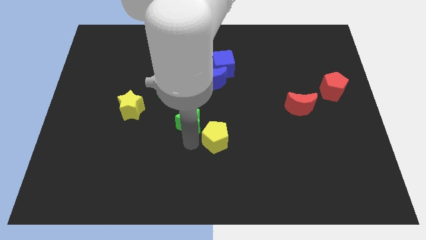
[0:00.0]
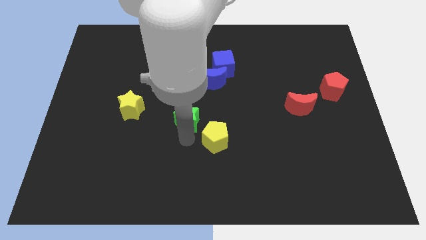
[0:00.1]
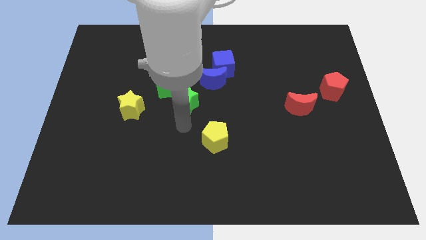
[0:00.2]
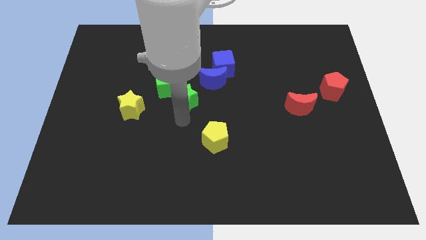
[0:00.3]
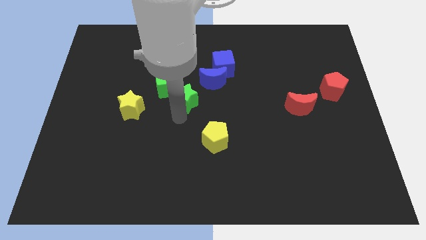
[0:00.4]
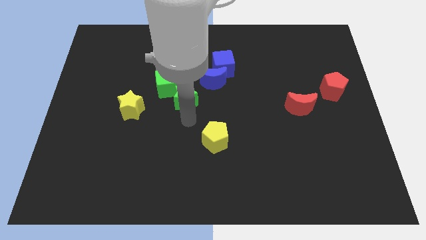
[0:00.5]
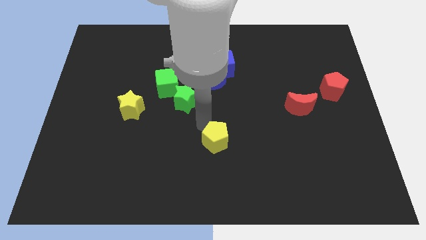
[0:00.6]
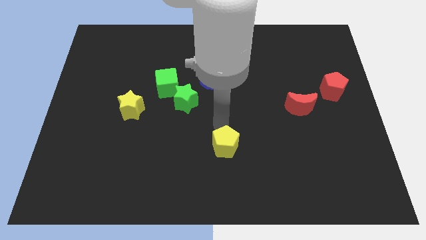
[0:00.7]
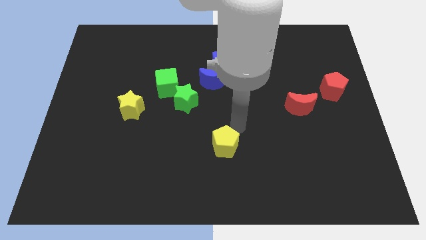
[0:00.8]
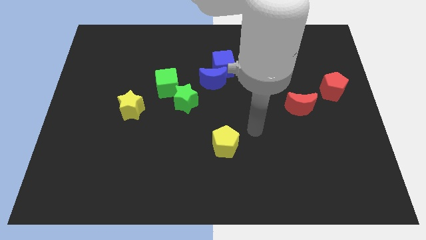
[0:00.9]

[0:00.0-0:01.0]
move green star into green cube

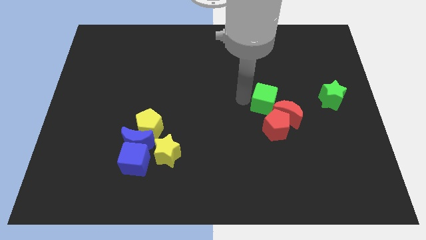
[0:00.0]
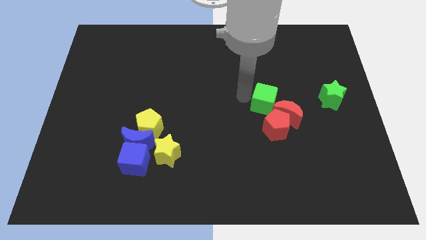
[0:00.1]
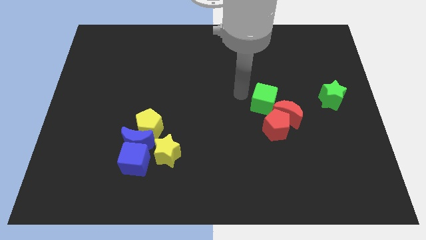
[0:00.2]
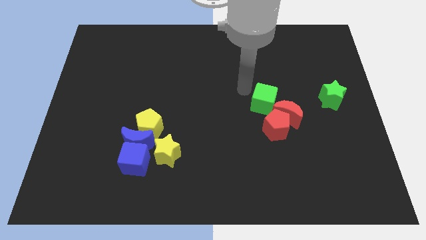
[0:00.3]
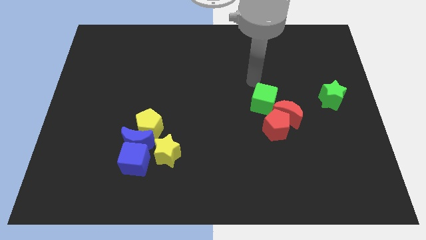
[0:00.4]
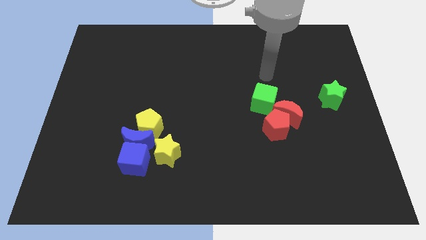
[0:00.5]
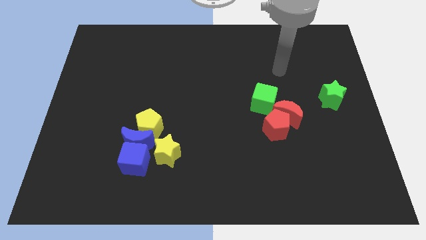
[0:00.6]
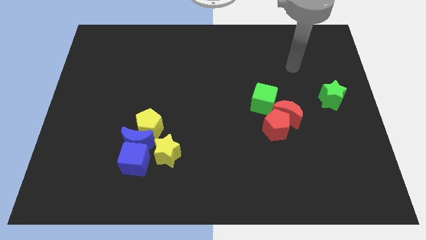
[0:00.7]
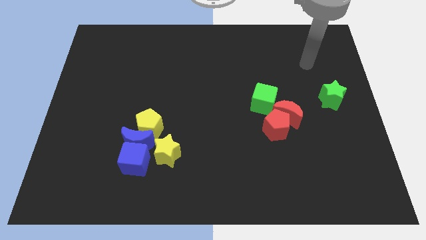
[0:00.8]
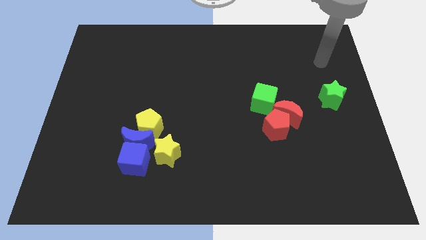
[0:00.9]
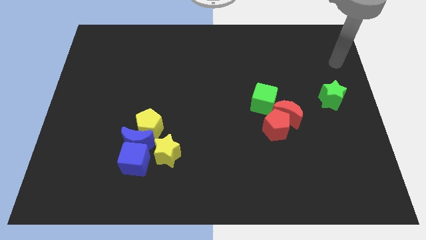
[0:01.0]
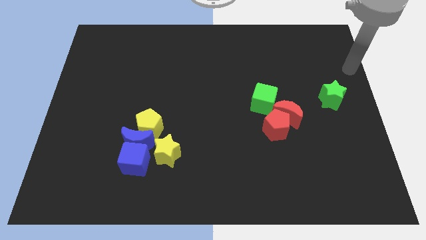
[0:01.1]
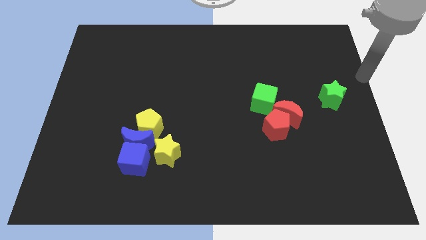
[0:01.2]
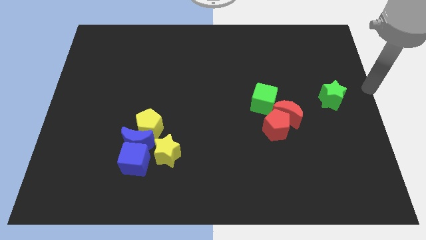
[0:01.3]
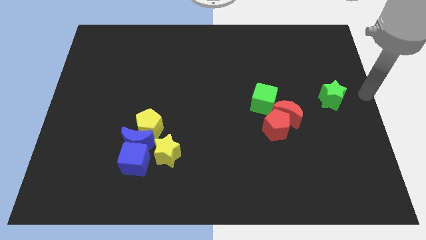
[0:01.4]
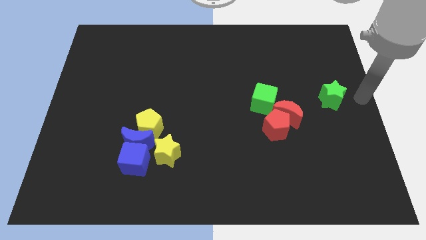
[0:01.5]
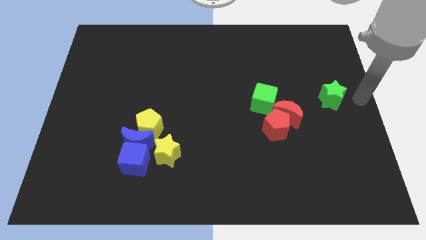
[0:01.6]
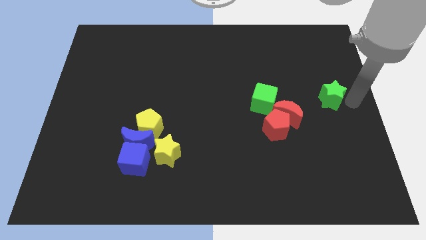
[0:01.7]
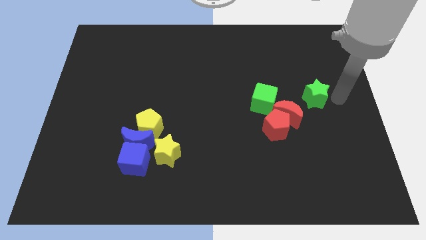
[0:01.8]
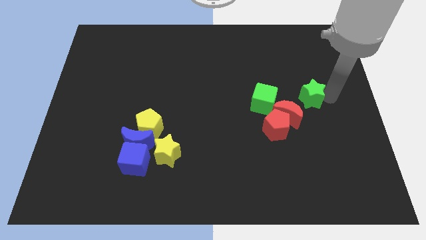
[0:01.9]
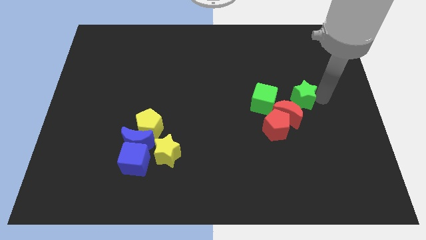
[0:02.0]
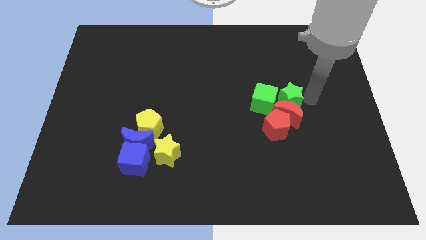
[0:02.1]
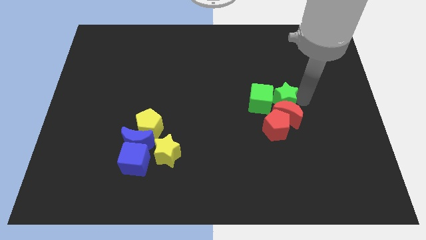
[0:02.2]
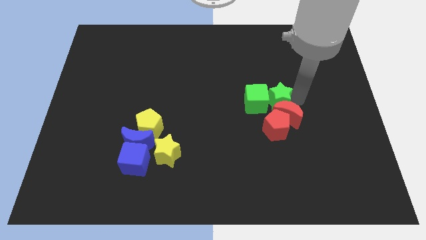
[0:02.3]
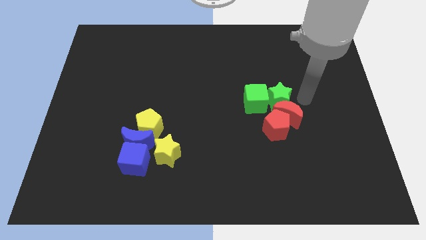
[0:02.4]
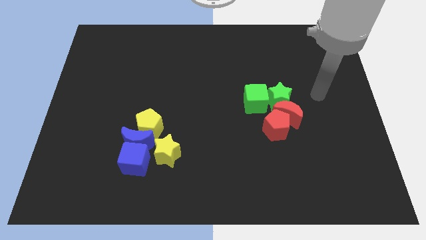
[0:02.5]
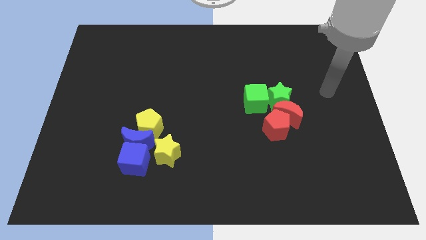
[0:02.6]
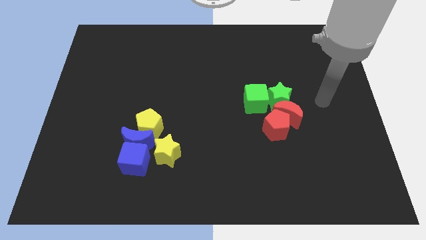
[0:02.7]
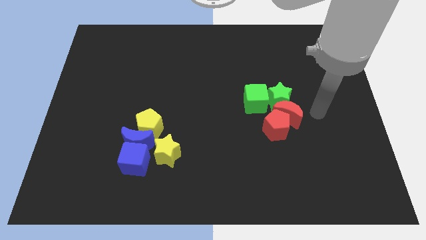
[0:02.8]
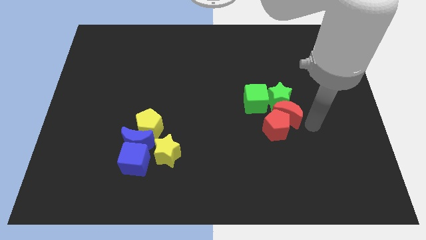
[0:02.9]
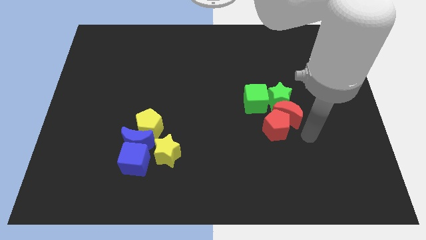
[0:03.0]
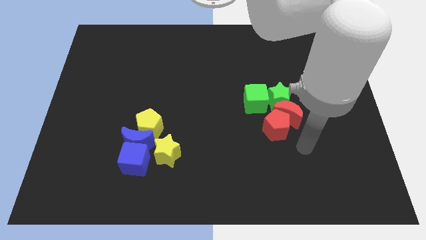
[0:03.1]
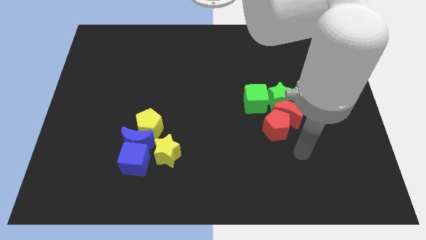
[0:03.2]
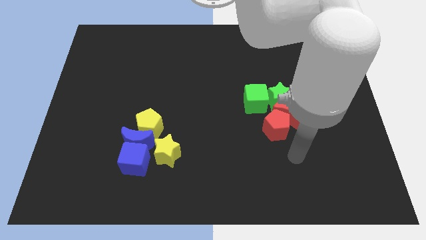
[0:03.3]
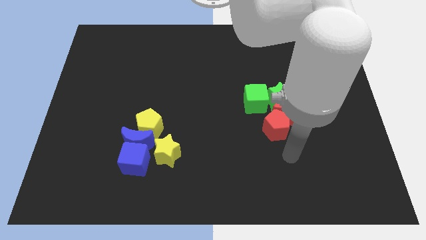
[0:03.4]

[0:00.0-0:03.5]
place the green star to the right side of the green cube

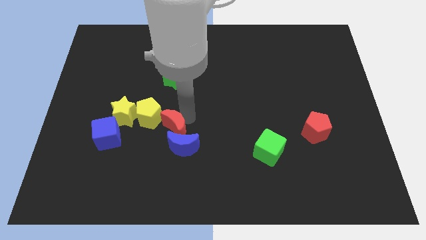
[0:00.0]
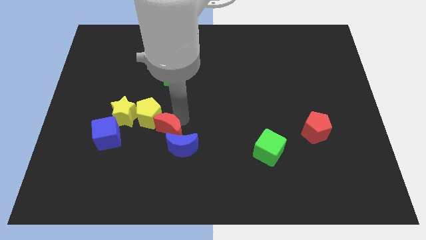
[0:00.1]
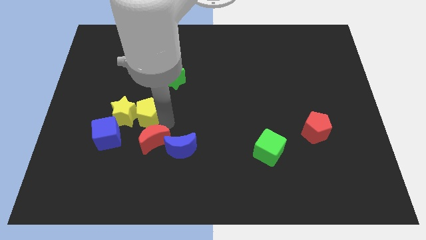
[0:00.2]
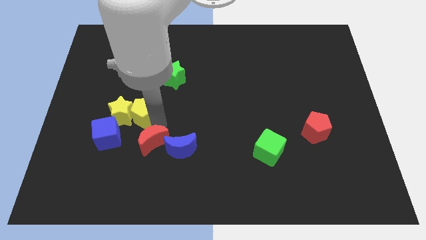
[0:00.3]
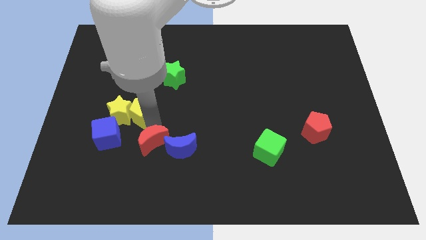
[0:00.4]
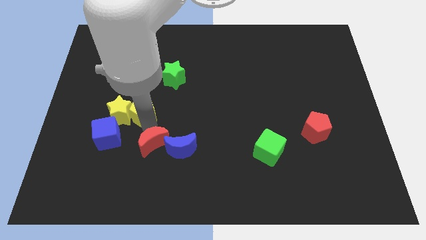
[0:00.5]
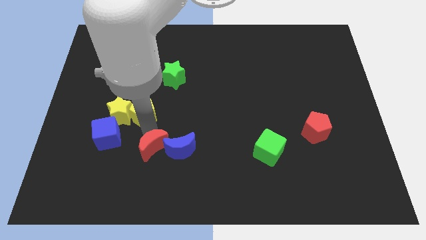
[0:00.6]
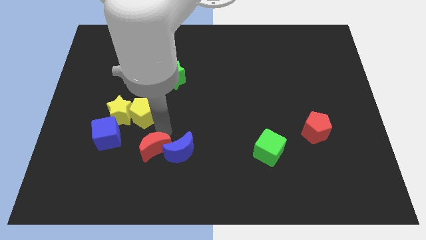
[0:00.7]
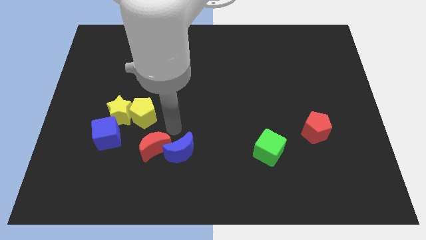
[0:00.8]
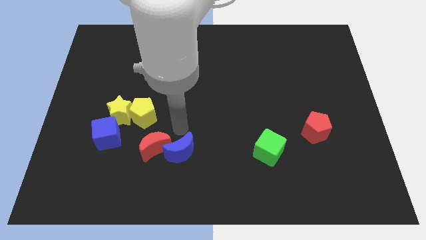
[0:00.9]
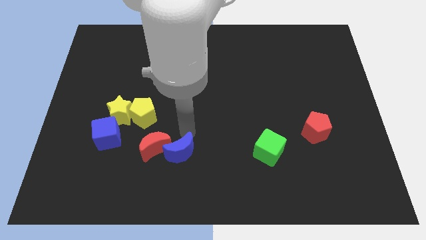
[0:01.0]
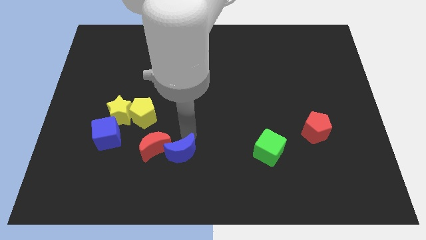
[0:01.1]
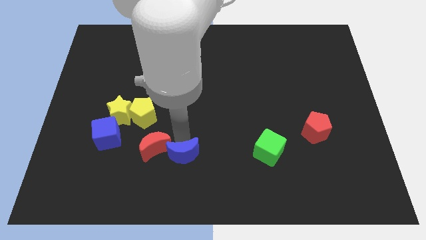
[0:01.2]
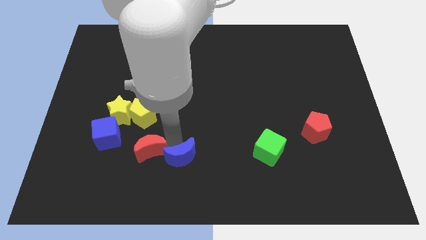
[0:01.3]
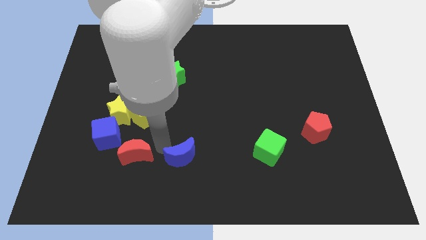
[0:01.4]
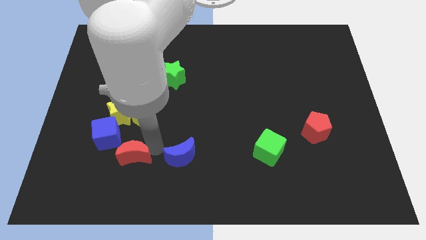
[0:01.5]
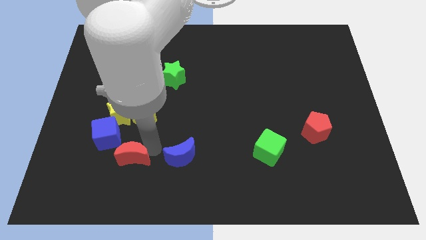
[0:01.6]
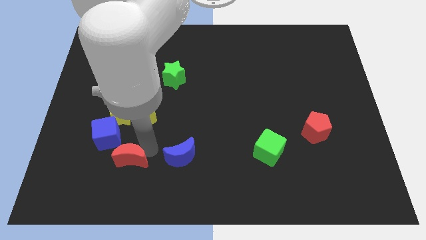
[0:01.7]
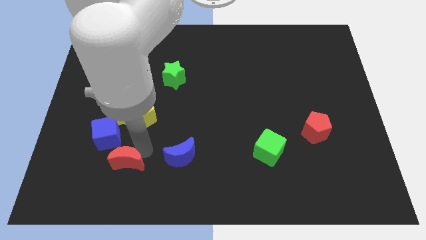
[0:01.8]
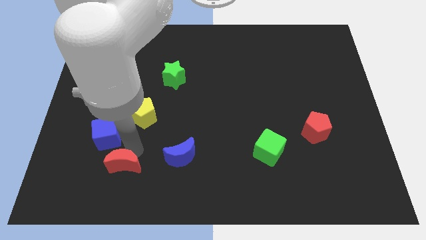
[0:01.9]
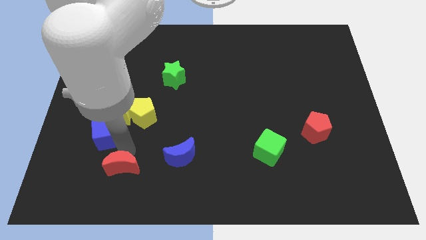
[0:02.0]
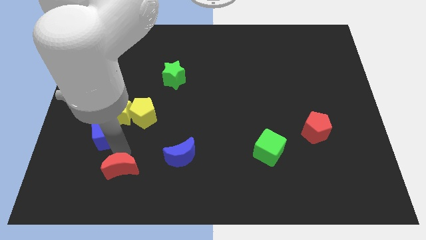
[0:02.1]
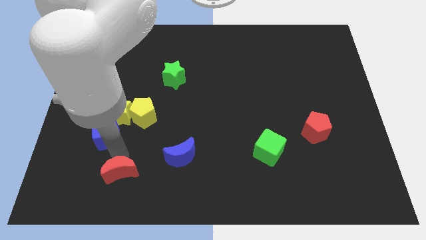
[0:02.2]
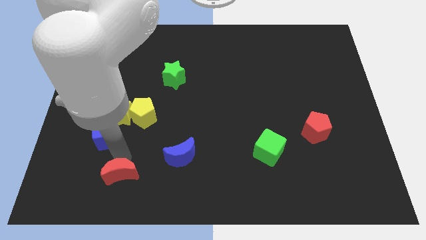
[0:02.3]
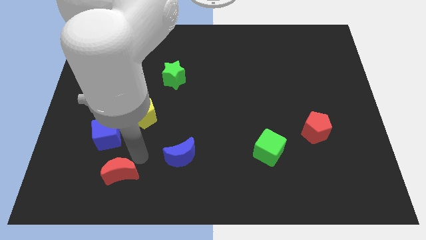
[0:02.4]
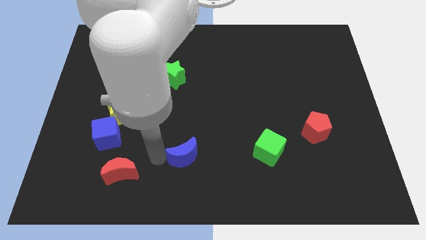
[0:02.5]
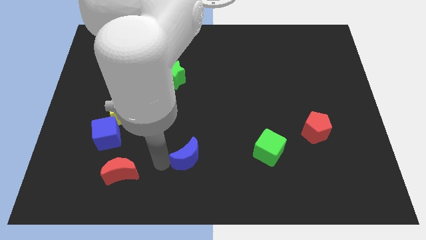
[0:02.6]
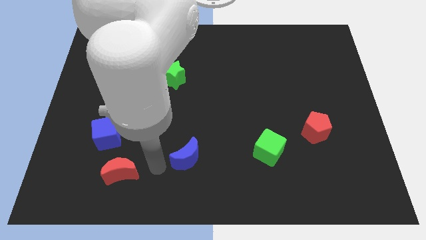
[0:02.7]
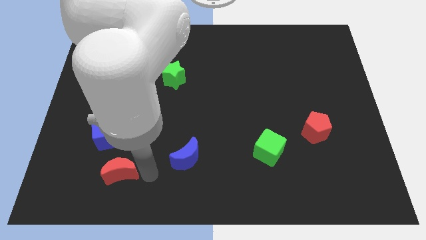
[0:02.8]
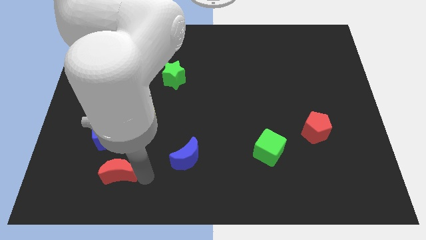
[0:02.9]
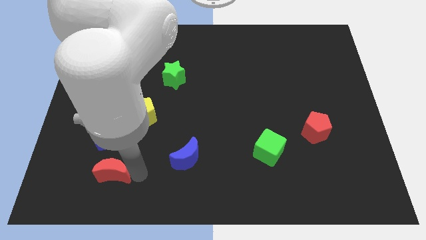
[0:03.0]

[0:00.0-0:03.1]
separate the blue moon from the red moon

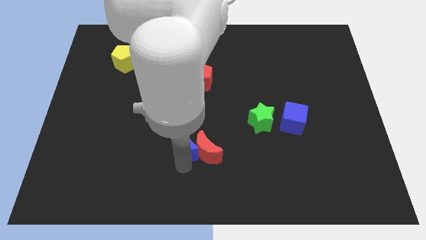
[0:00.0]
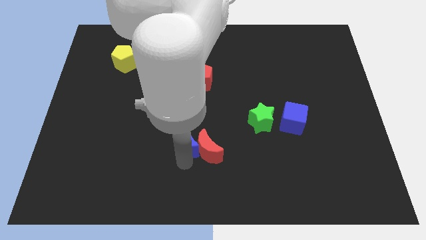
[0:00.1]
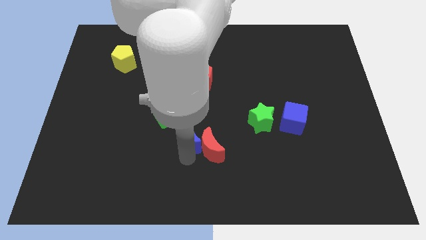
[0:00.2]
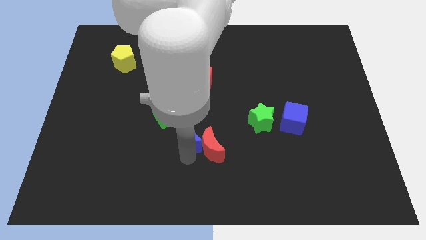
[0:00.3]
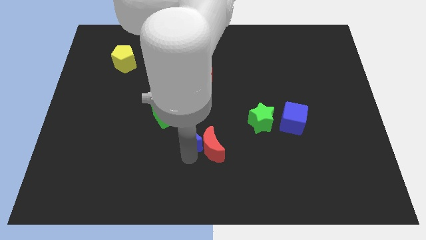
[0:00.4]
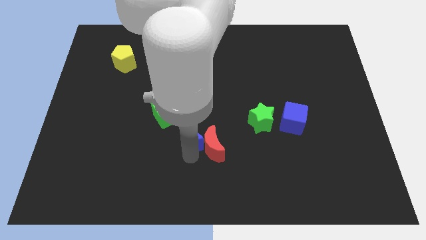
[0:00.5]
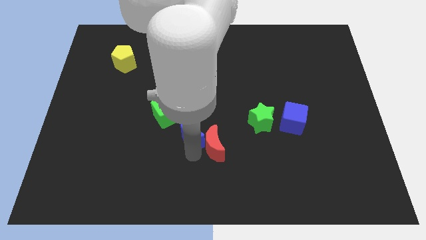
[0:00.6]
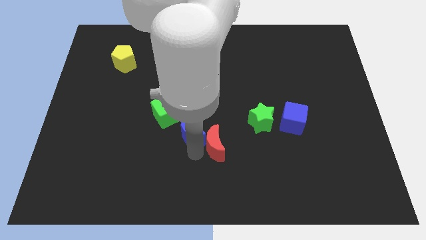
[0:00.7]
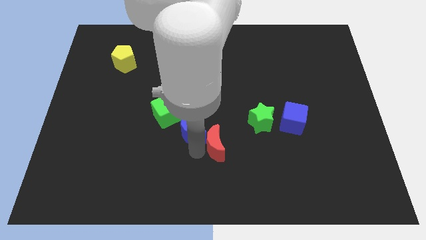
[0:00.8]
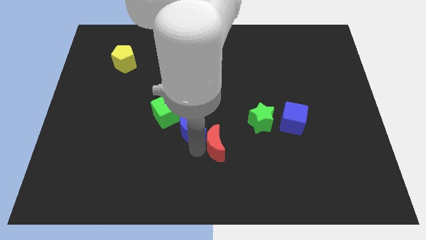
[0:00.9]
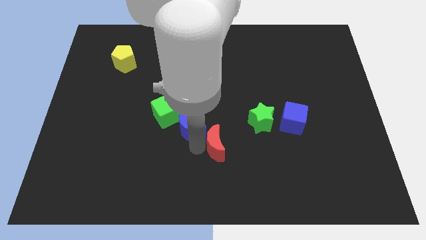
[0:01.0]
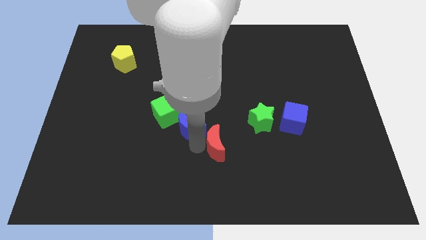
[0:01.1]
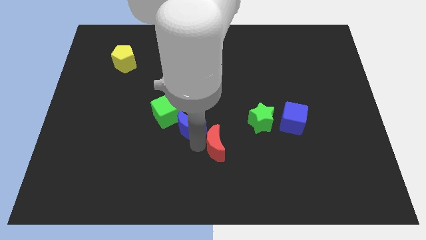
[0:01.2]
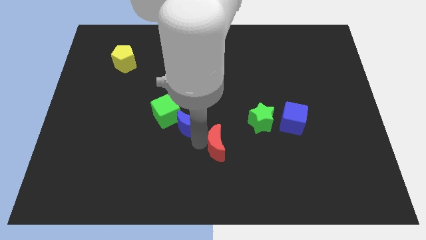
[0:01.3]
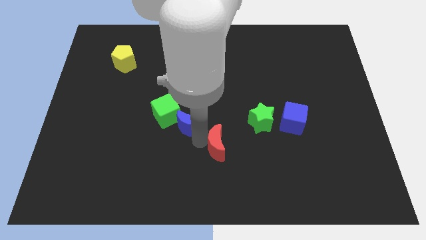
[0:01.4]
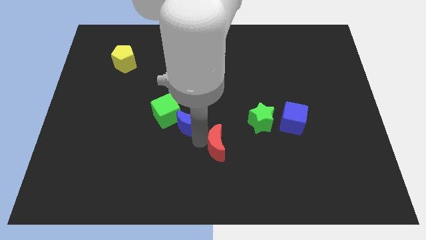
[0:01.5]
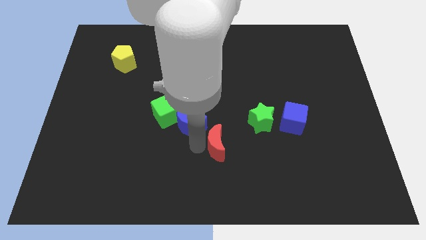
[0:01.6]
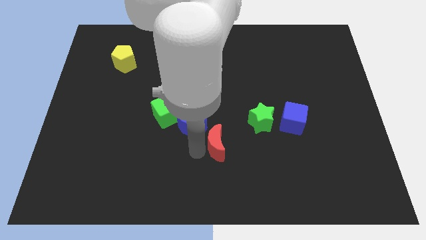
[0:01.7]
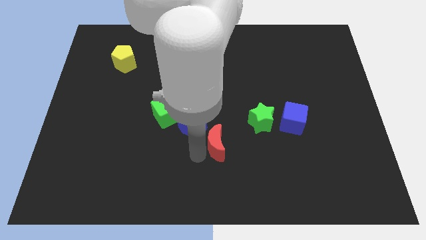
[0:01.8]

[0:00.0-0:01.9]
place blue crescent below yellow star
